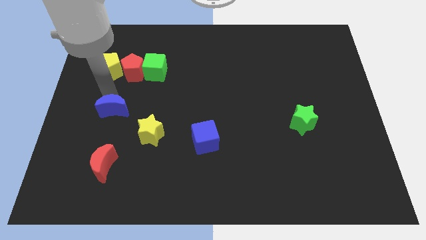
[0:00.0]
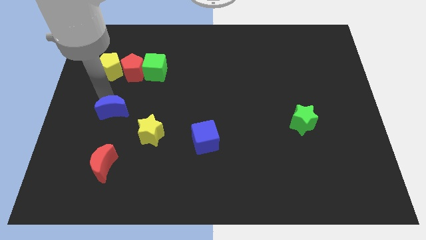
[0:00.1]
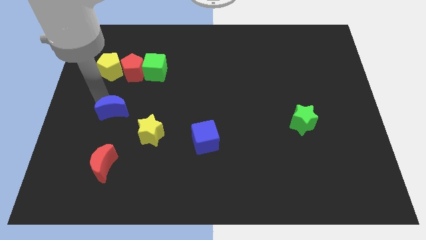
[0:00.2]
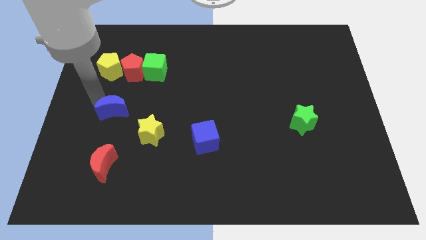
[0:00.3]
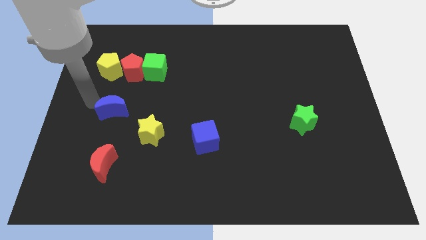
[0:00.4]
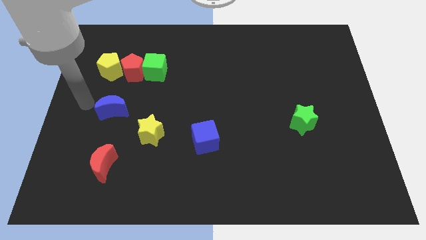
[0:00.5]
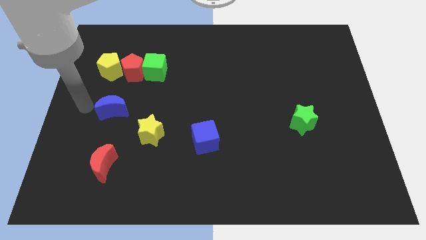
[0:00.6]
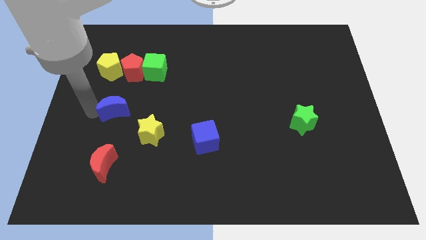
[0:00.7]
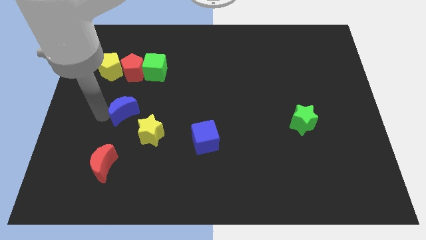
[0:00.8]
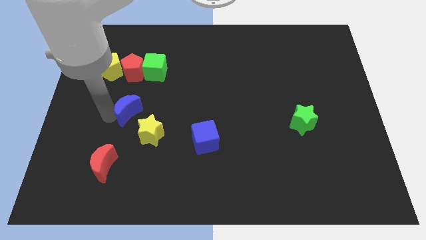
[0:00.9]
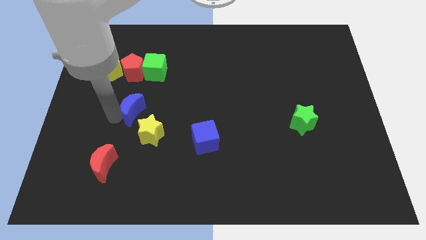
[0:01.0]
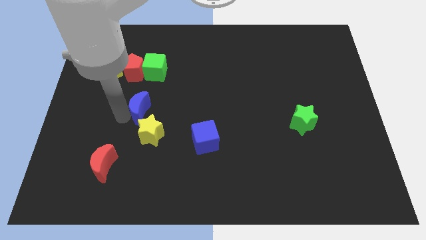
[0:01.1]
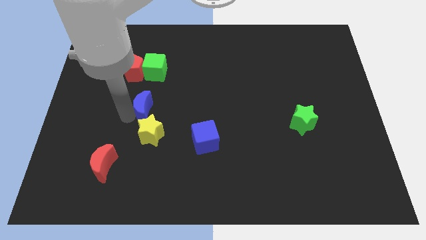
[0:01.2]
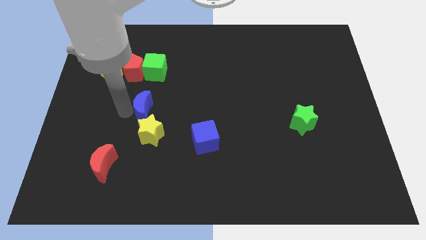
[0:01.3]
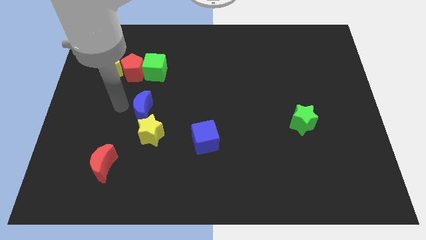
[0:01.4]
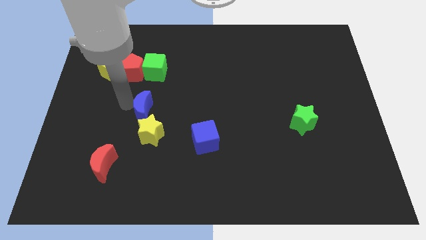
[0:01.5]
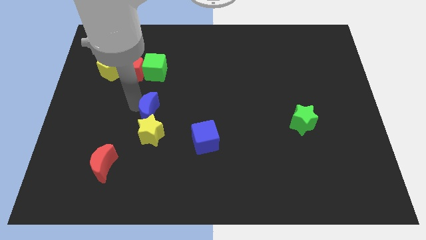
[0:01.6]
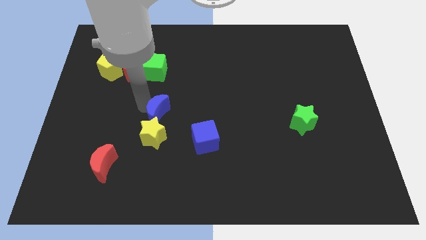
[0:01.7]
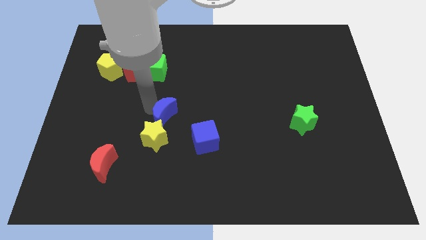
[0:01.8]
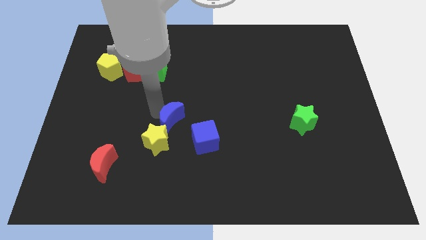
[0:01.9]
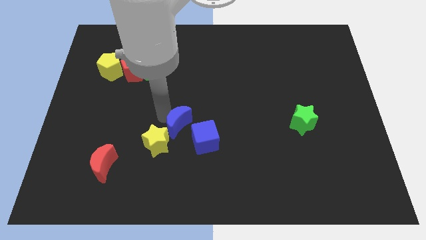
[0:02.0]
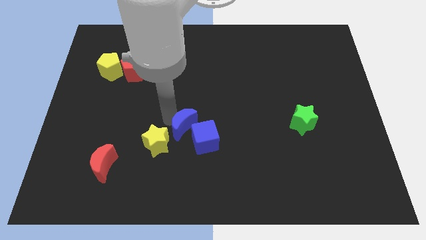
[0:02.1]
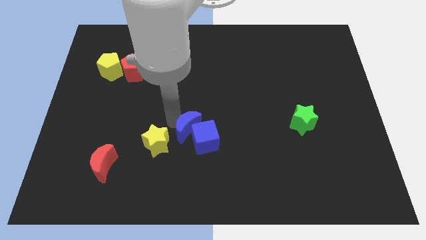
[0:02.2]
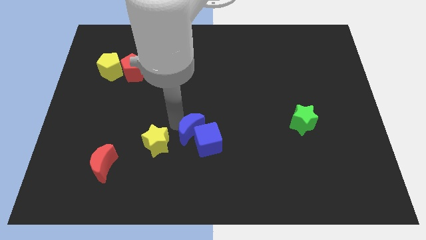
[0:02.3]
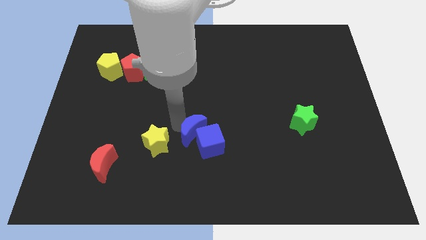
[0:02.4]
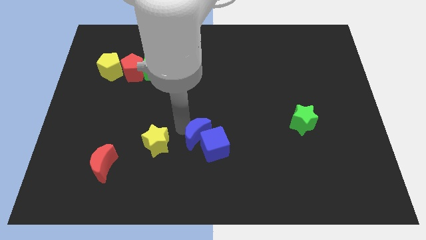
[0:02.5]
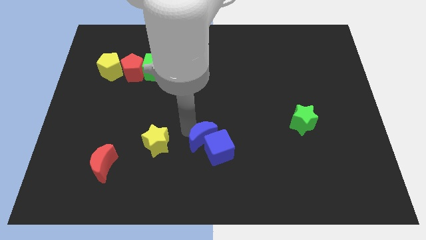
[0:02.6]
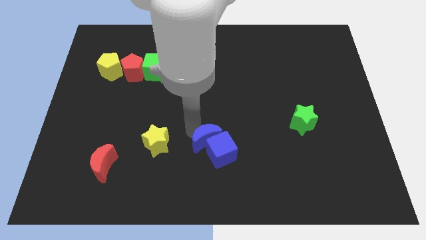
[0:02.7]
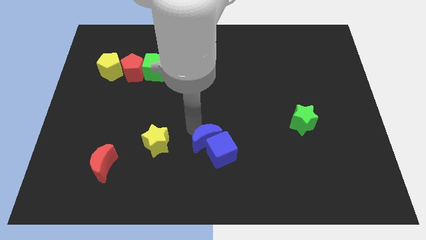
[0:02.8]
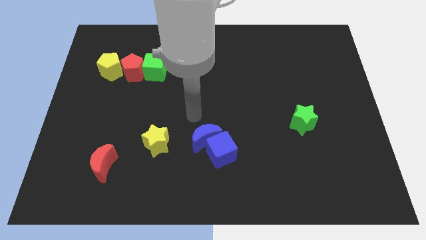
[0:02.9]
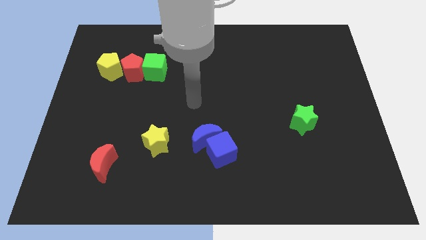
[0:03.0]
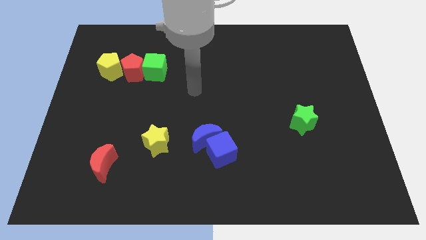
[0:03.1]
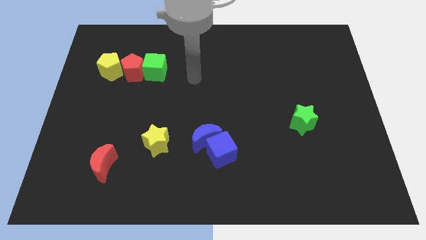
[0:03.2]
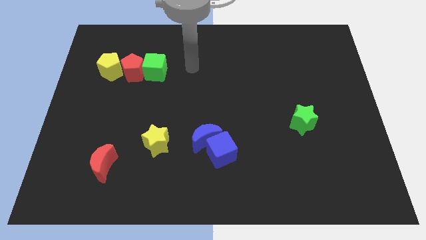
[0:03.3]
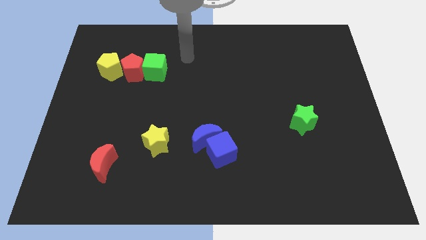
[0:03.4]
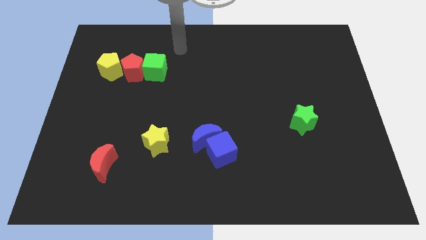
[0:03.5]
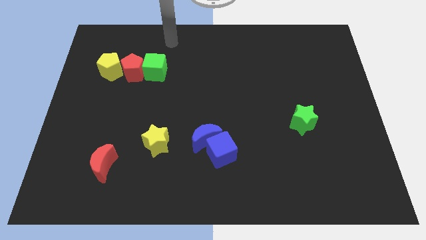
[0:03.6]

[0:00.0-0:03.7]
push the blue crescent into the blue cube

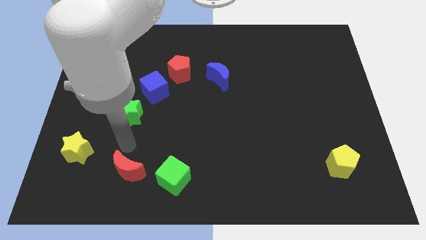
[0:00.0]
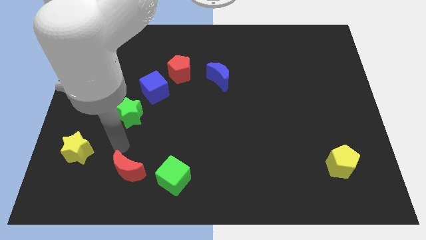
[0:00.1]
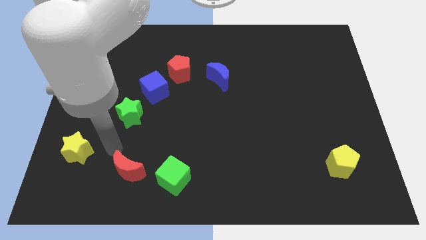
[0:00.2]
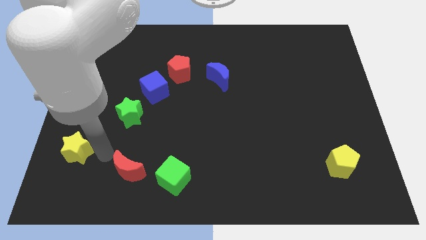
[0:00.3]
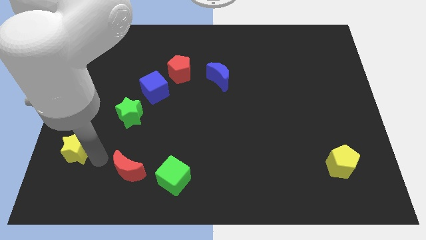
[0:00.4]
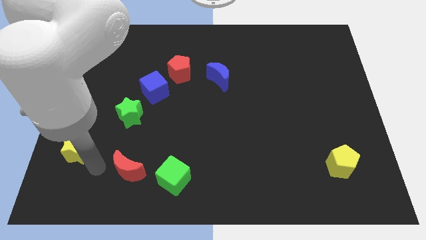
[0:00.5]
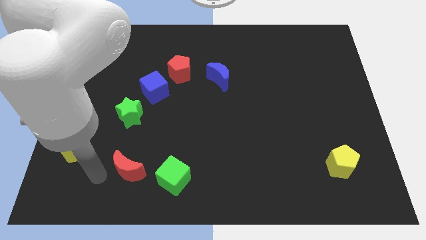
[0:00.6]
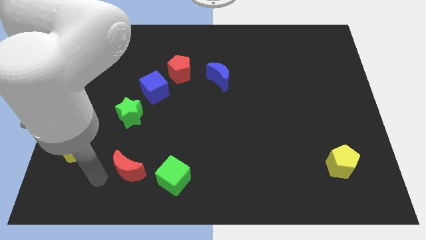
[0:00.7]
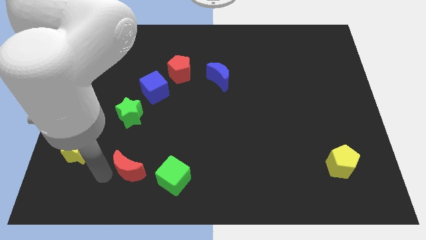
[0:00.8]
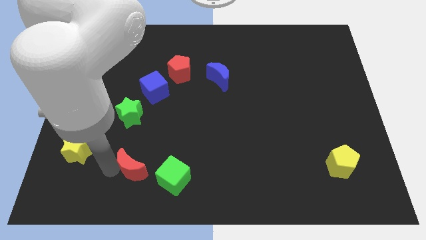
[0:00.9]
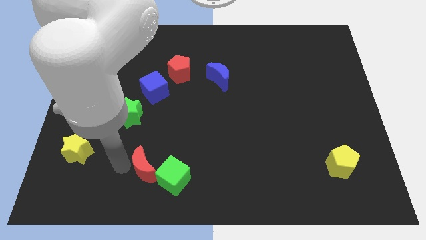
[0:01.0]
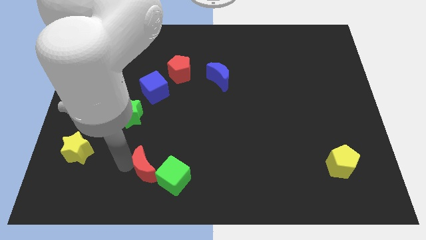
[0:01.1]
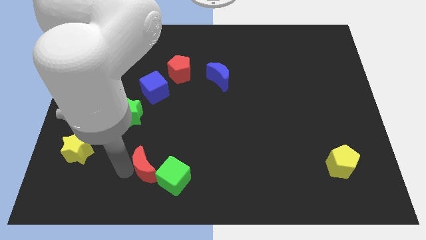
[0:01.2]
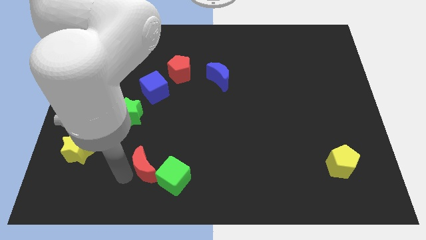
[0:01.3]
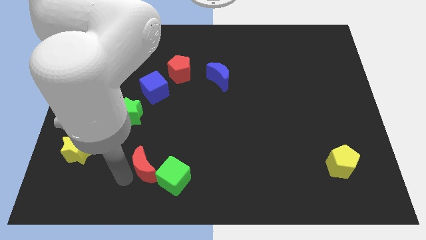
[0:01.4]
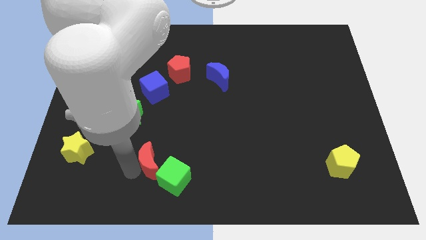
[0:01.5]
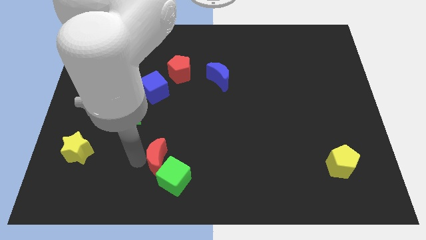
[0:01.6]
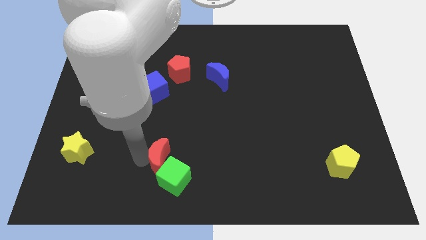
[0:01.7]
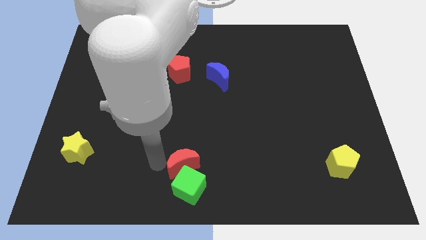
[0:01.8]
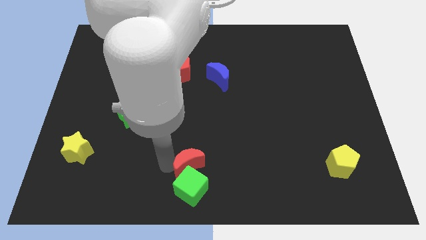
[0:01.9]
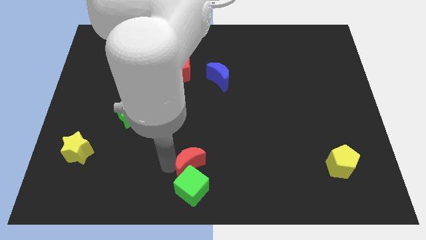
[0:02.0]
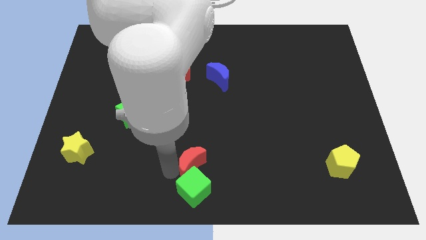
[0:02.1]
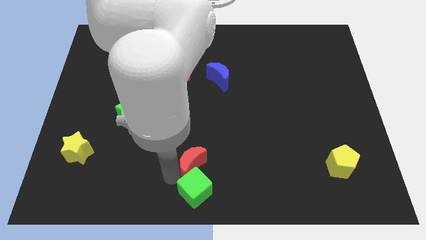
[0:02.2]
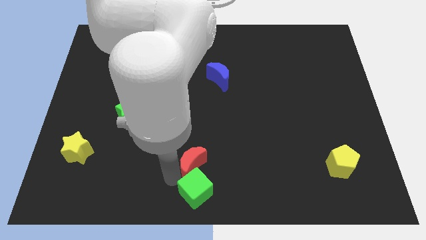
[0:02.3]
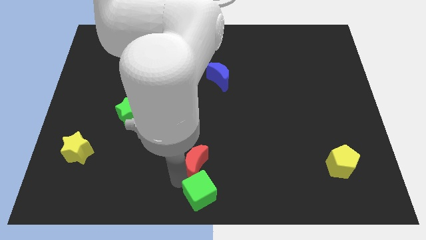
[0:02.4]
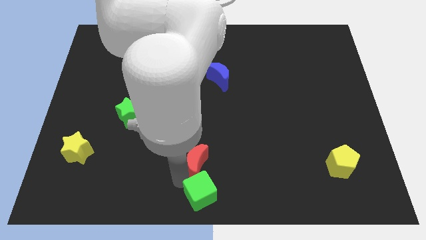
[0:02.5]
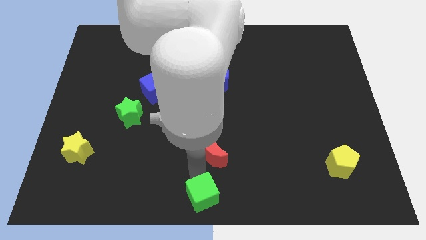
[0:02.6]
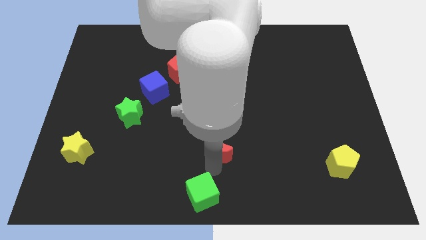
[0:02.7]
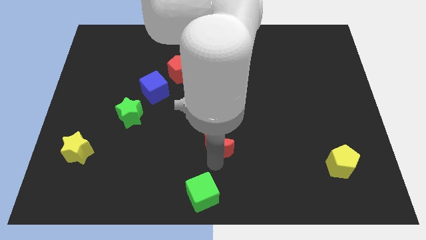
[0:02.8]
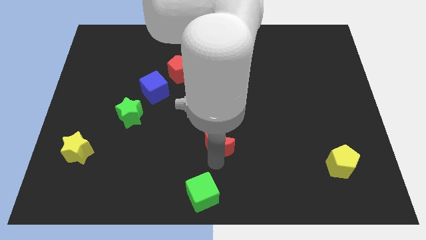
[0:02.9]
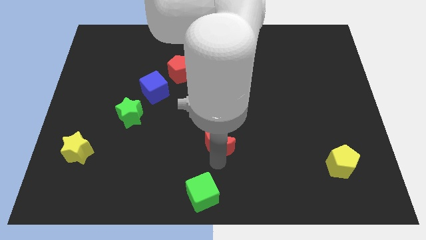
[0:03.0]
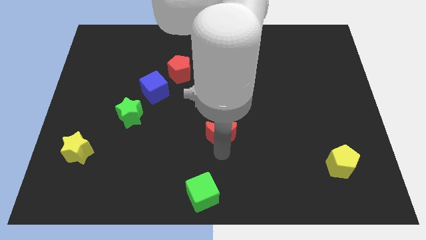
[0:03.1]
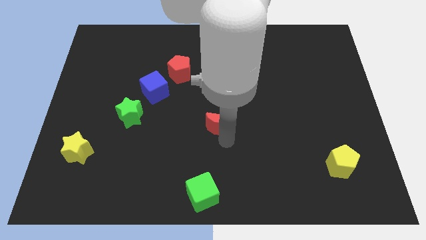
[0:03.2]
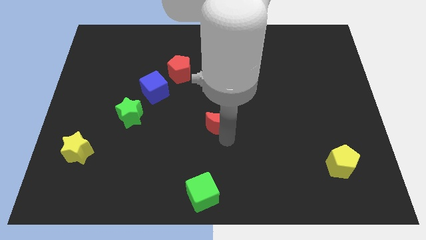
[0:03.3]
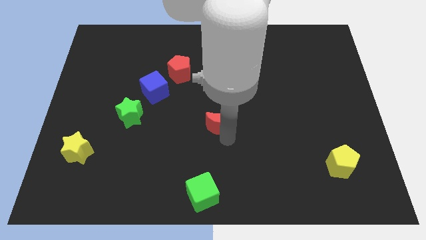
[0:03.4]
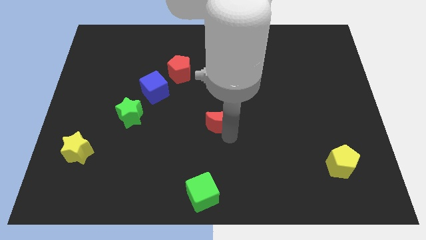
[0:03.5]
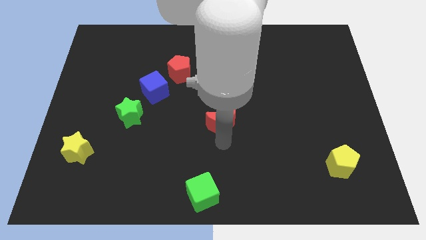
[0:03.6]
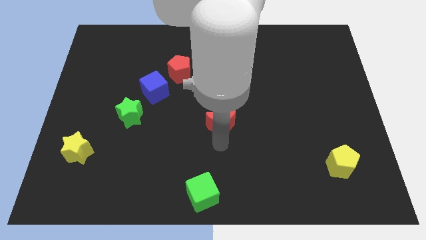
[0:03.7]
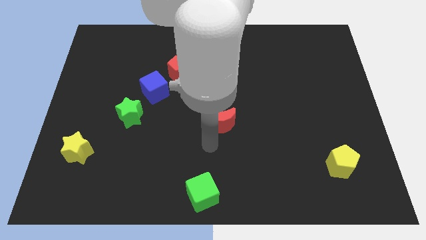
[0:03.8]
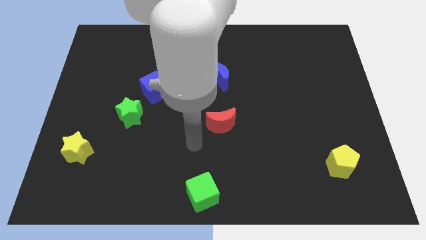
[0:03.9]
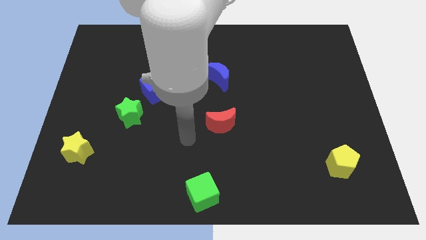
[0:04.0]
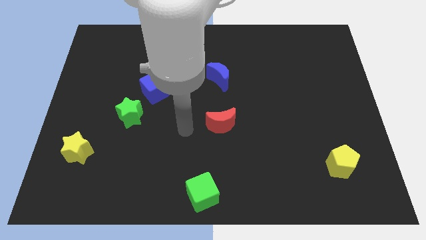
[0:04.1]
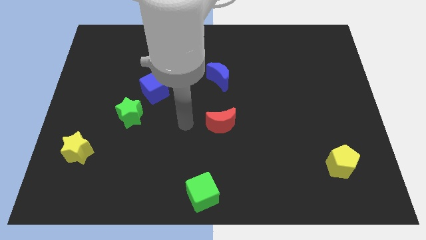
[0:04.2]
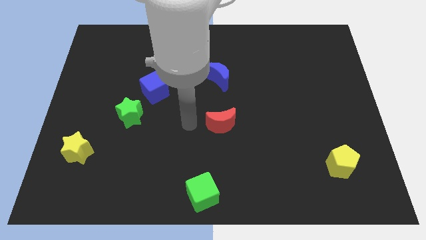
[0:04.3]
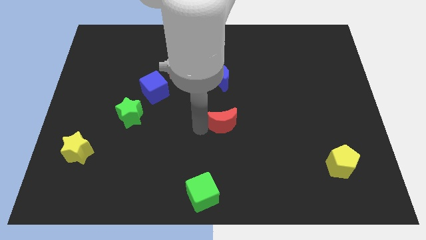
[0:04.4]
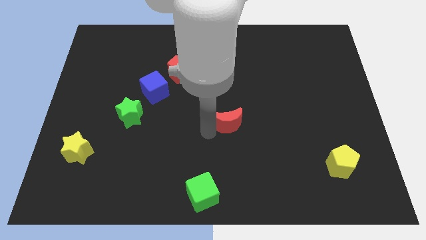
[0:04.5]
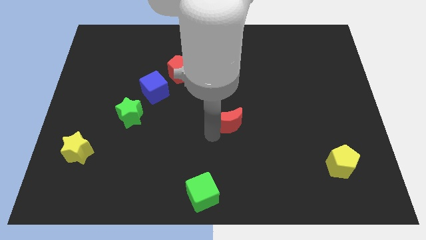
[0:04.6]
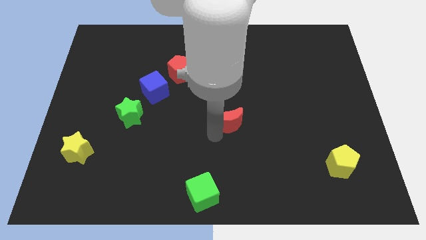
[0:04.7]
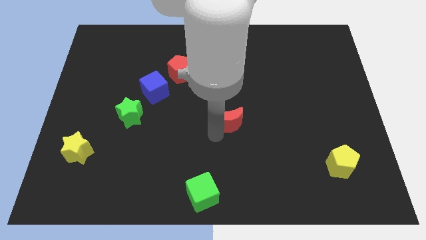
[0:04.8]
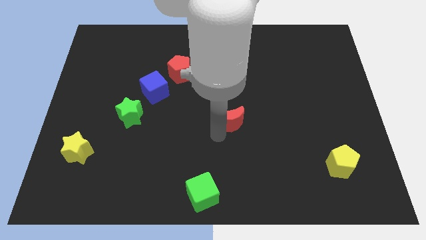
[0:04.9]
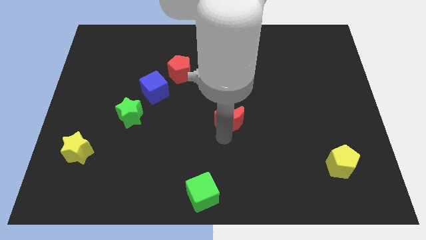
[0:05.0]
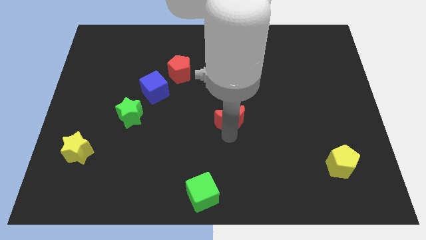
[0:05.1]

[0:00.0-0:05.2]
slide the red moon into the center of the board
